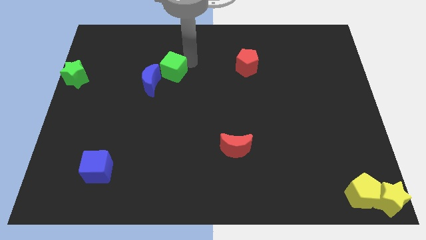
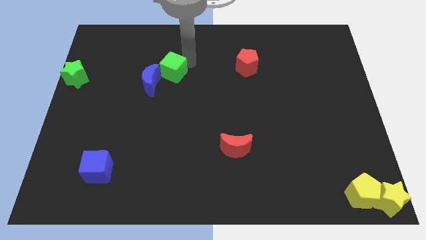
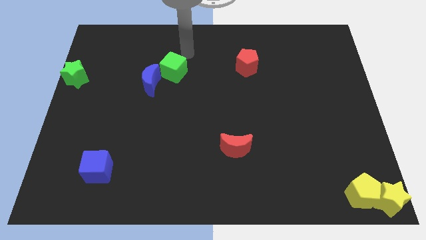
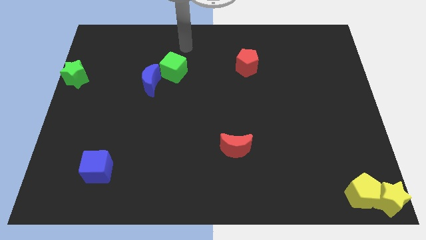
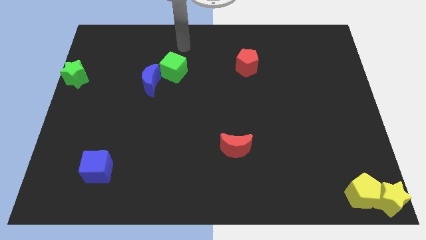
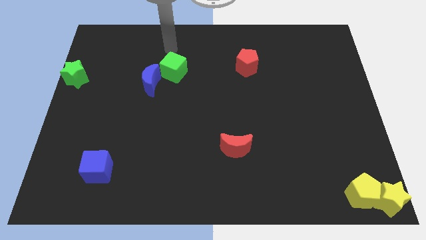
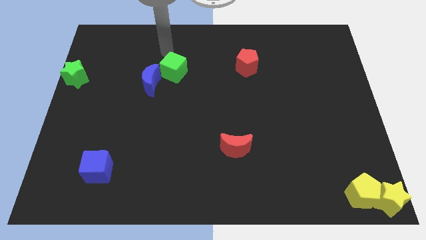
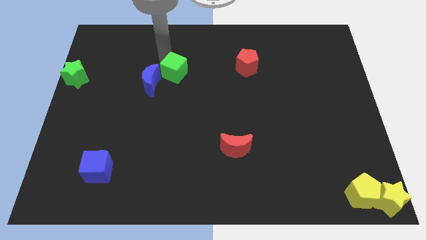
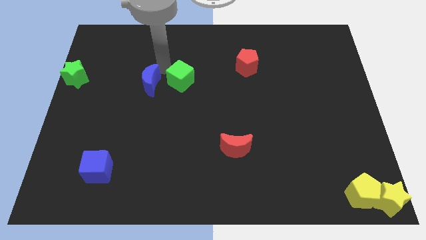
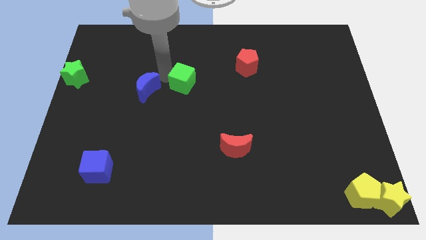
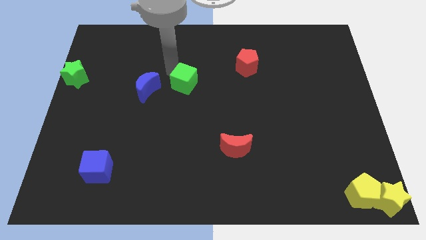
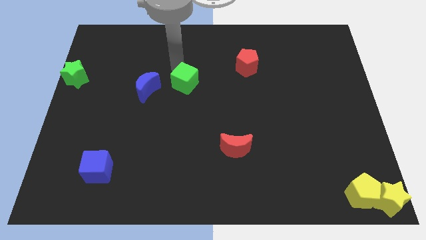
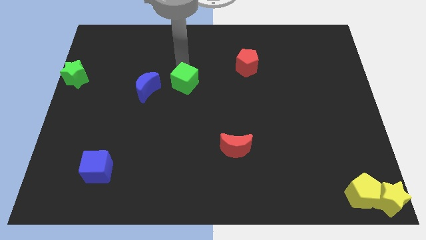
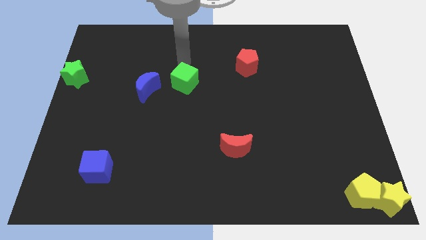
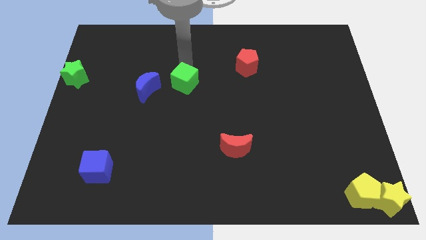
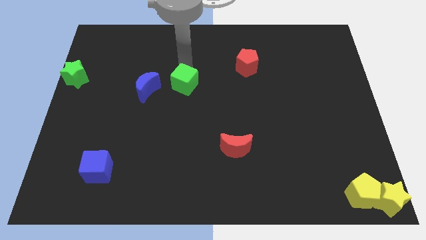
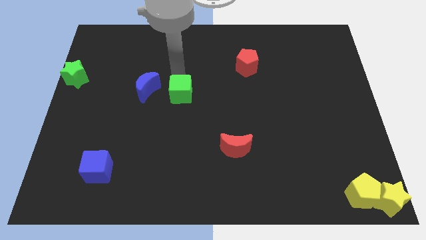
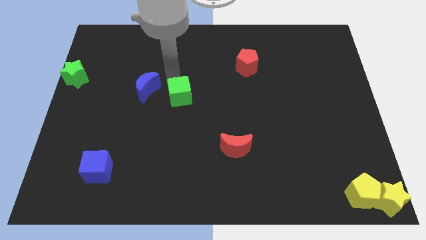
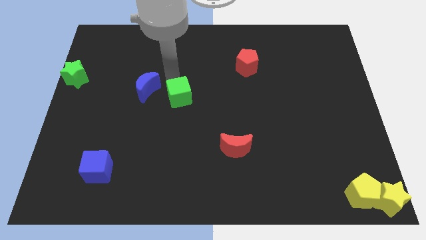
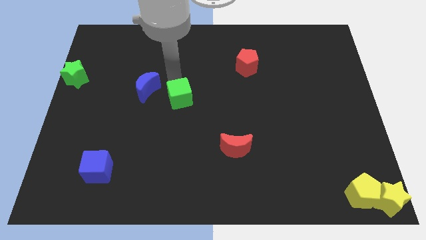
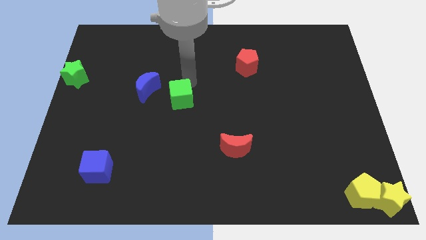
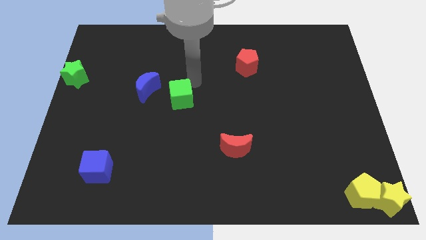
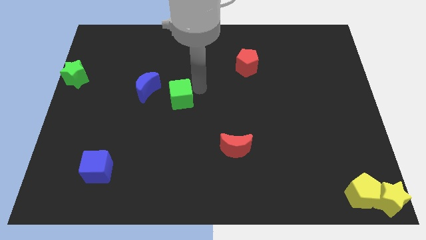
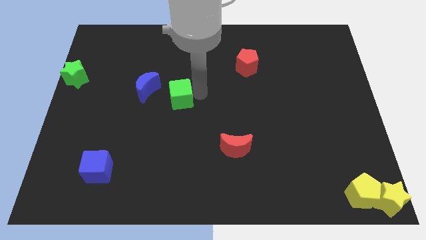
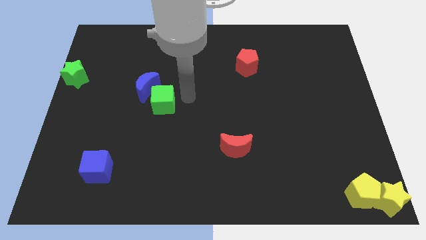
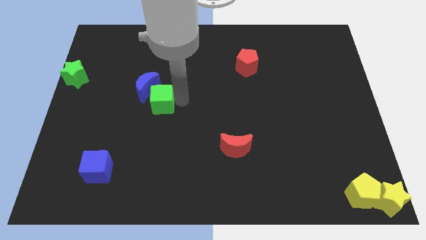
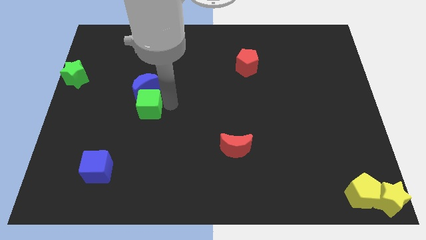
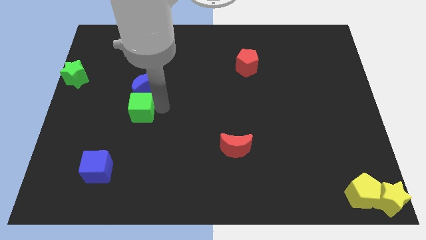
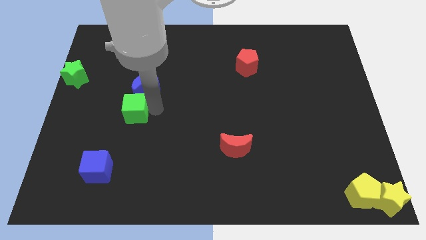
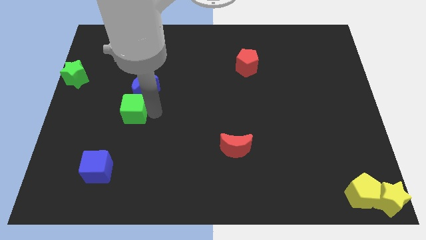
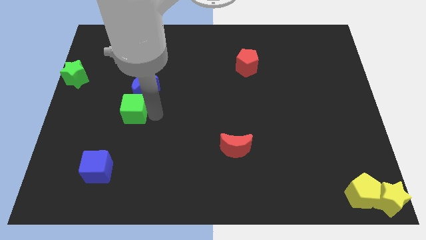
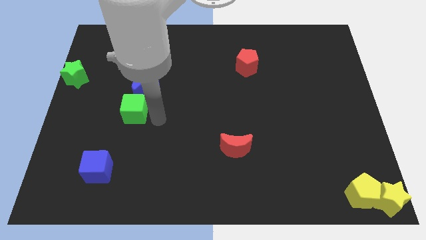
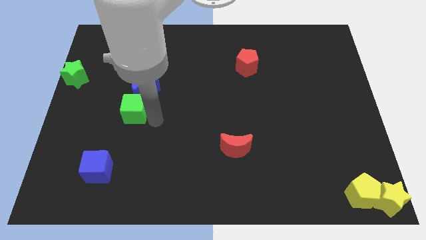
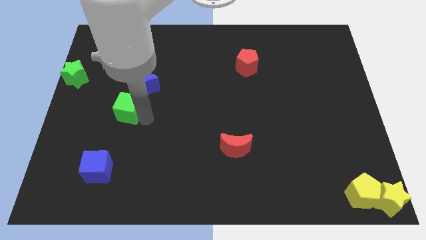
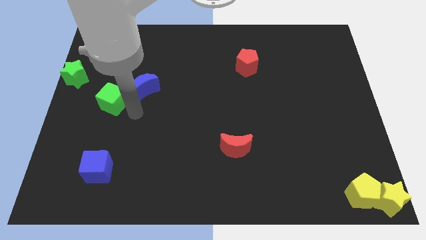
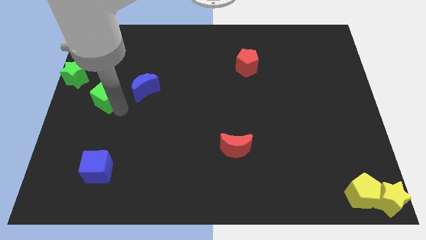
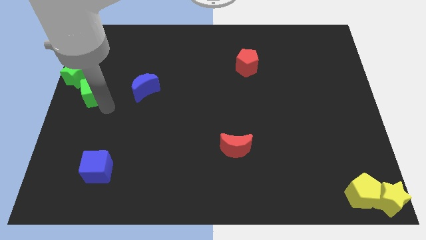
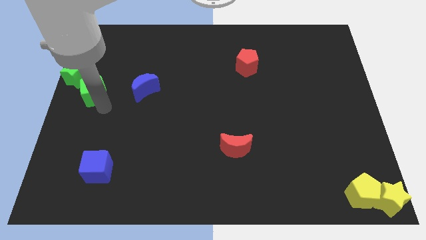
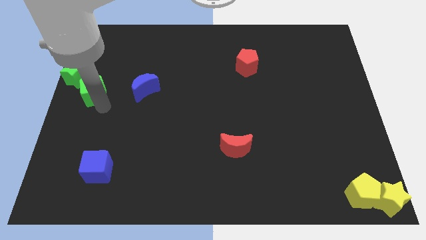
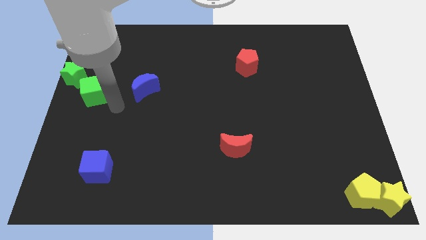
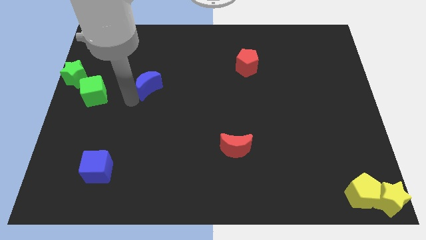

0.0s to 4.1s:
place the green cube to the bottom of the green star

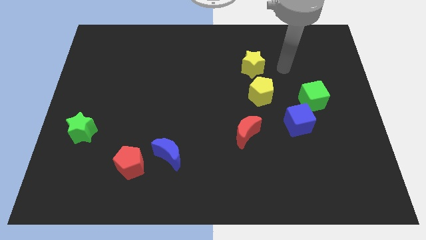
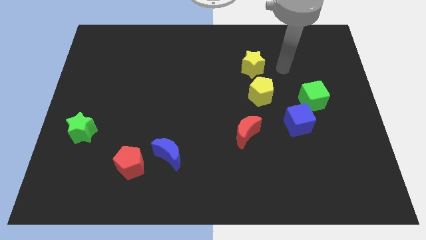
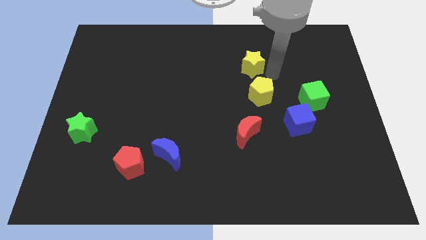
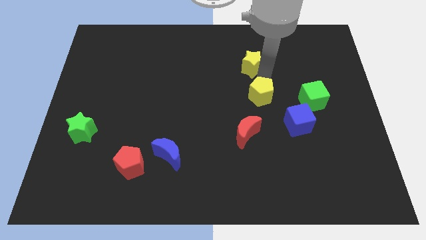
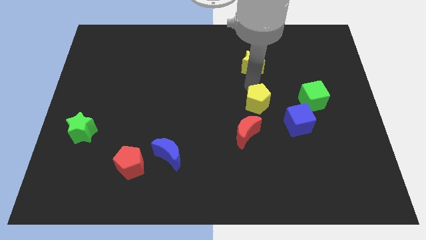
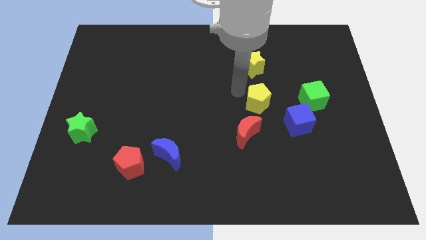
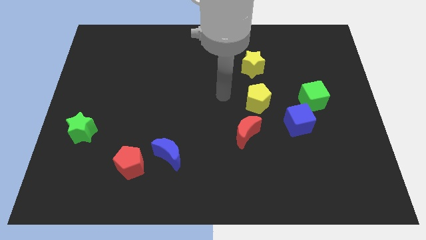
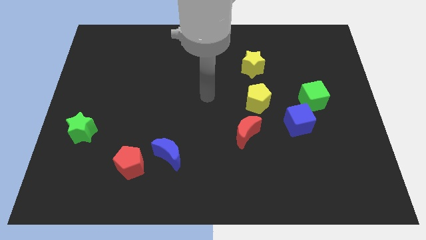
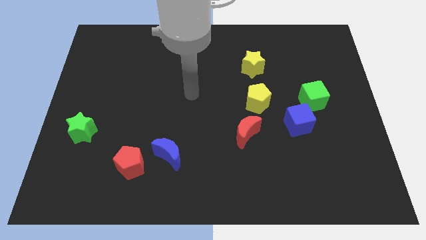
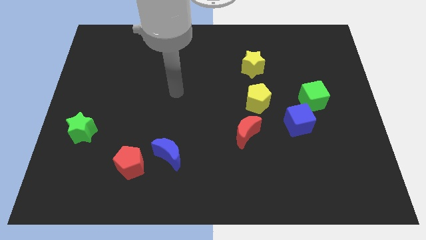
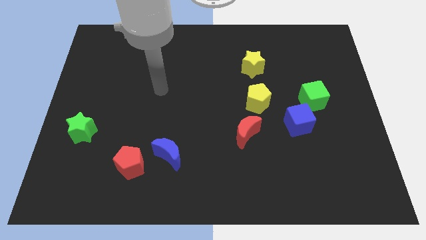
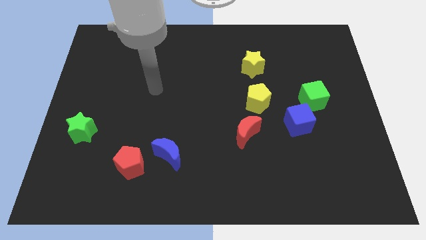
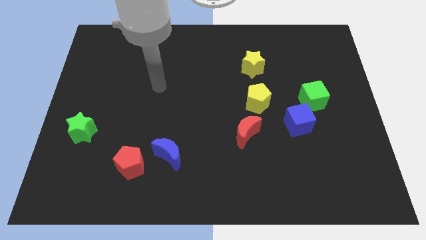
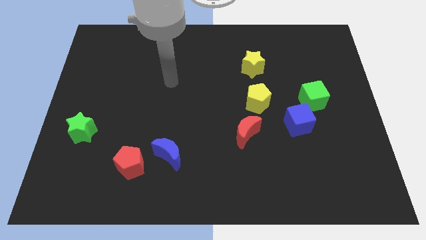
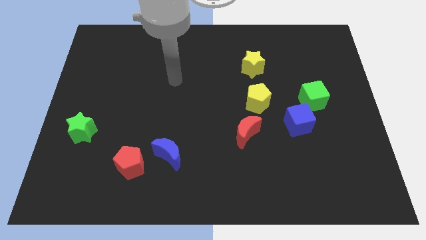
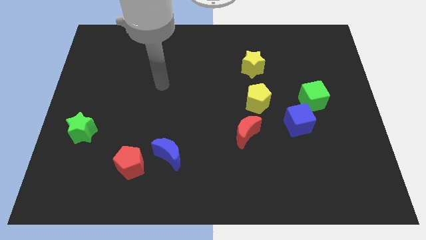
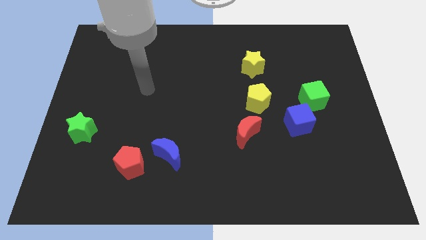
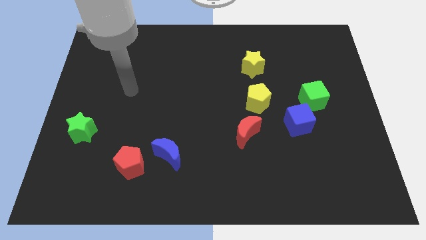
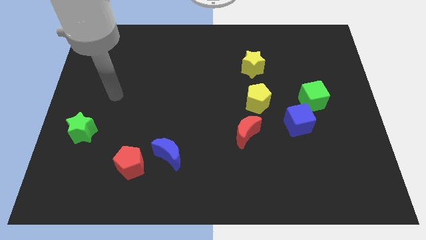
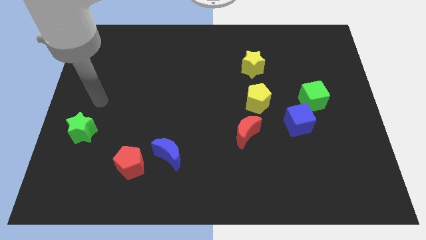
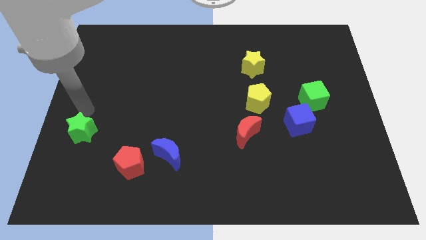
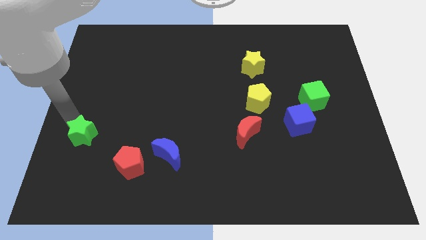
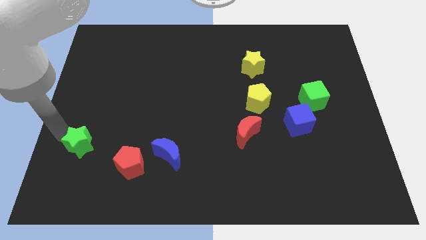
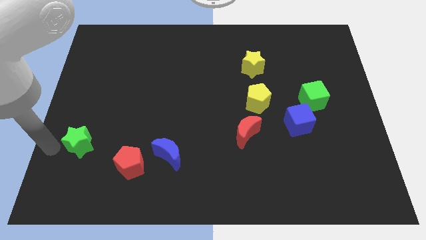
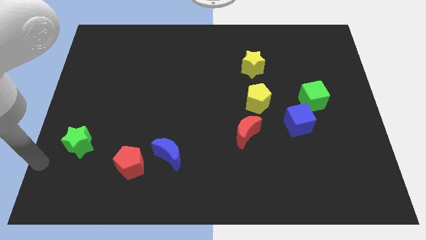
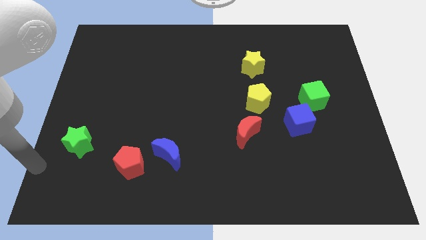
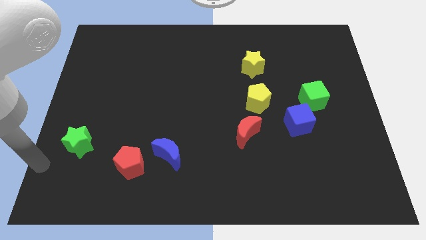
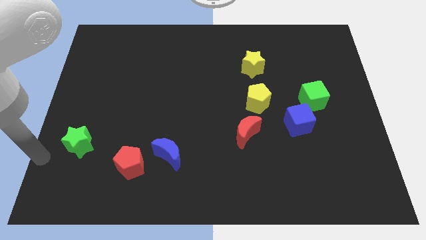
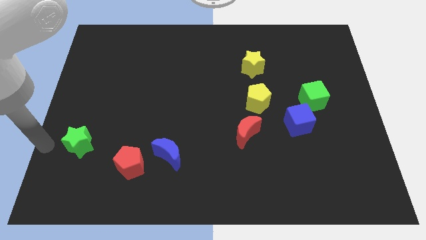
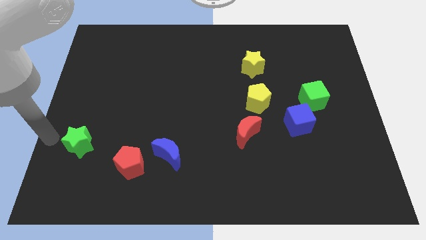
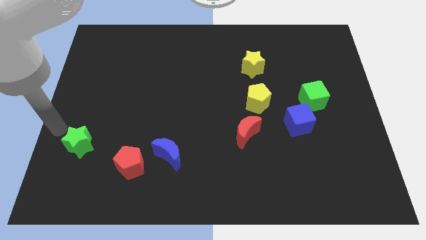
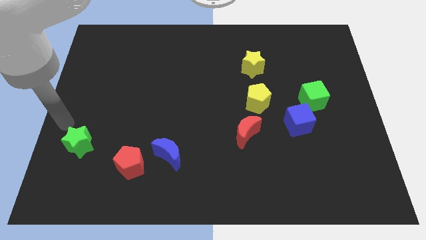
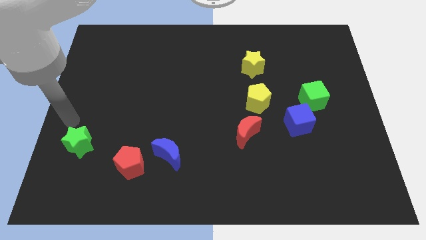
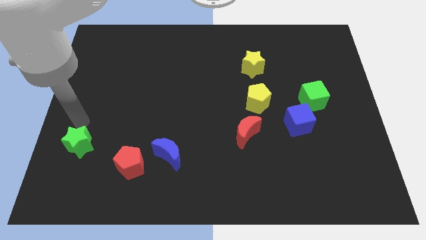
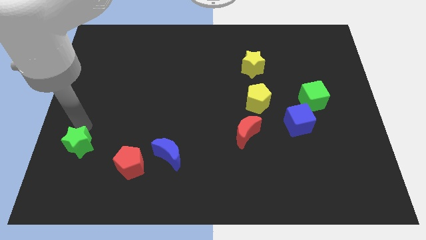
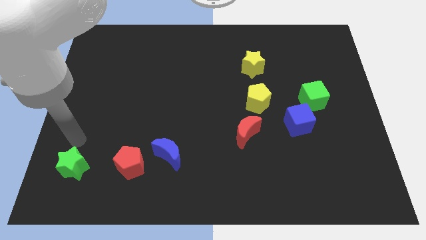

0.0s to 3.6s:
push the green star parallel to the red pentagon

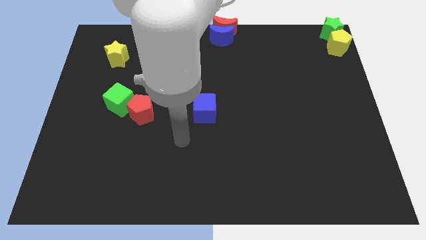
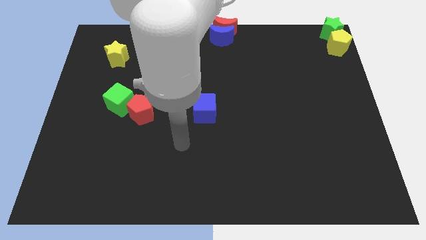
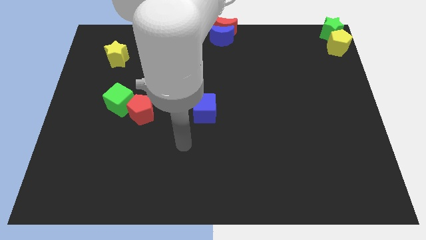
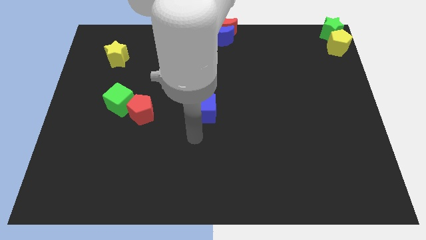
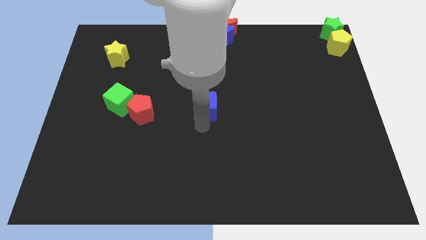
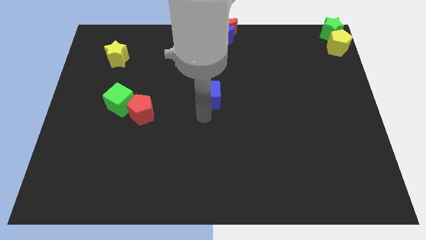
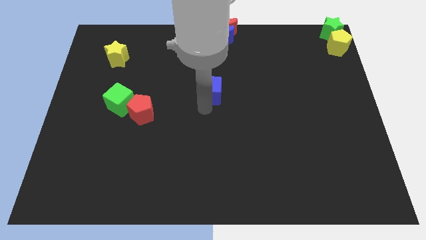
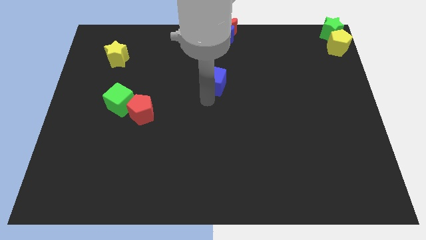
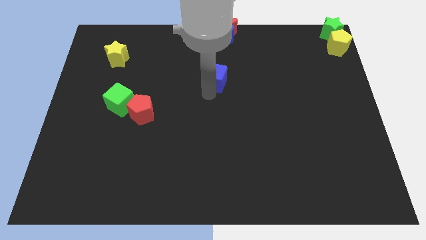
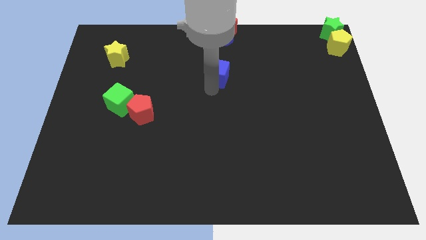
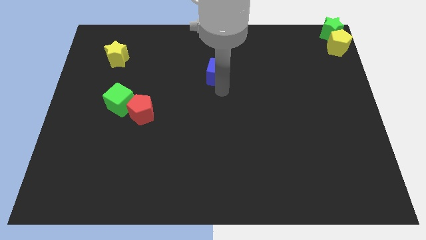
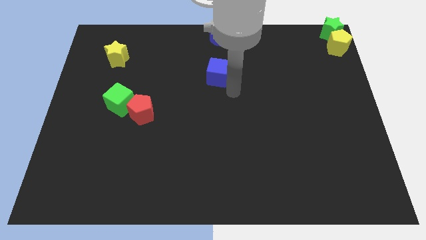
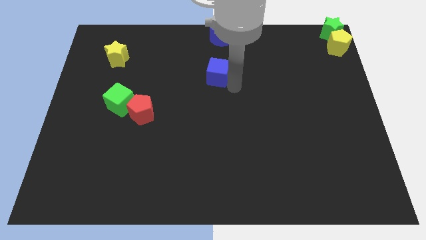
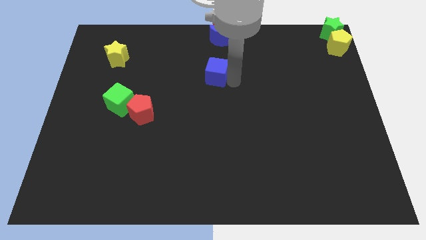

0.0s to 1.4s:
slide the blue cube vertically to the bottom side of the blue crescent
